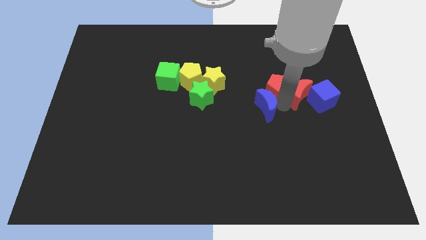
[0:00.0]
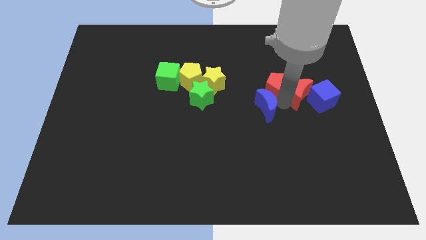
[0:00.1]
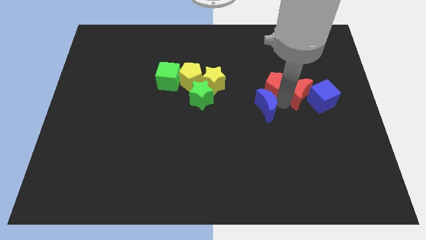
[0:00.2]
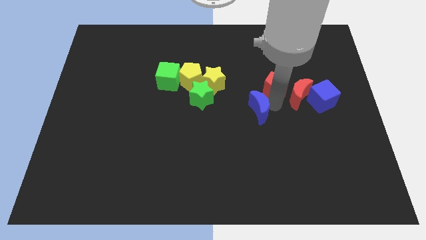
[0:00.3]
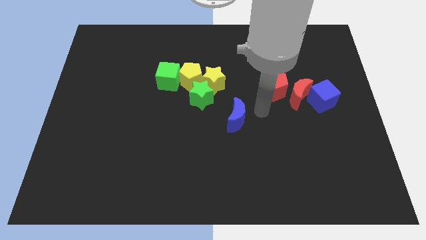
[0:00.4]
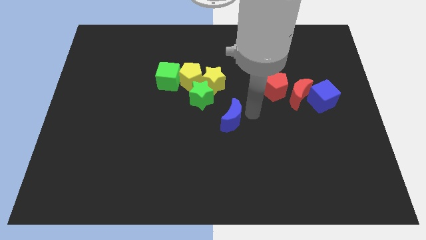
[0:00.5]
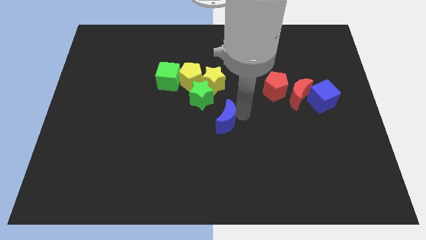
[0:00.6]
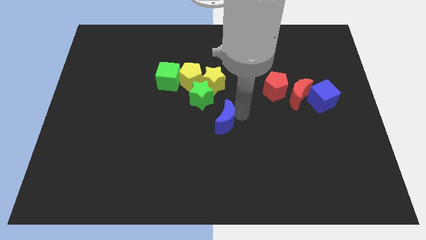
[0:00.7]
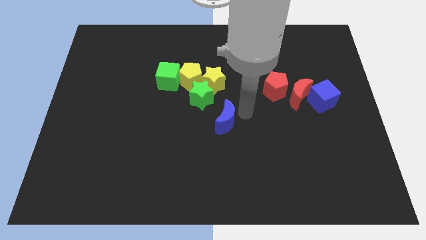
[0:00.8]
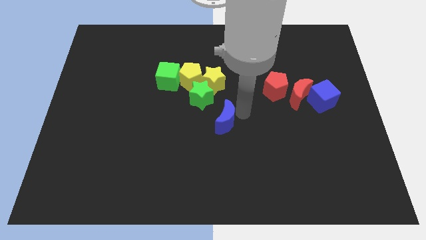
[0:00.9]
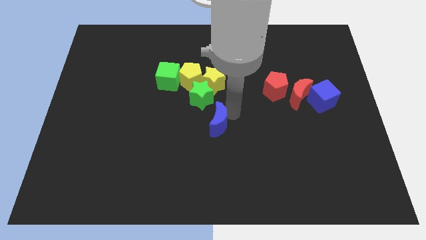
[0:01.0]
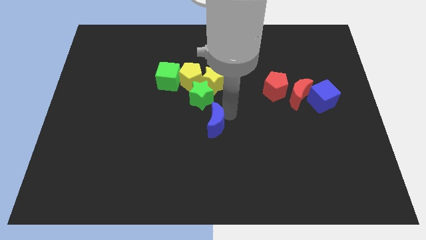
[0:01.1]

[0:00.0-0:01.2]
move the blue crescent away from the red pentagon

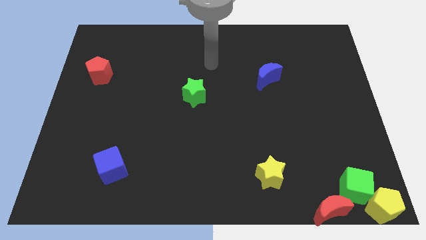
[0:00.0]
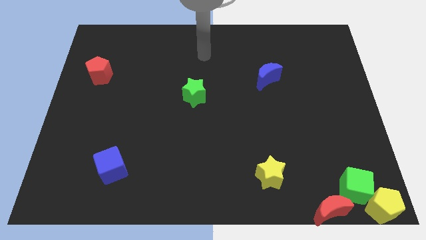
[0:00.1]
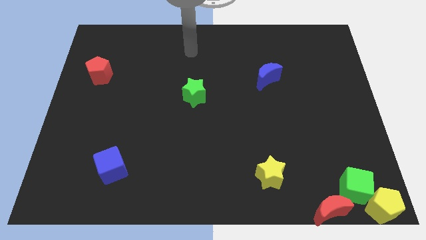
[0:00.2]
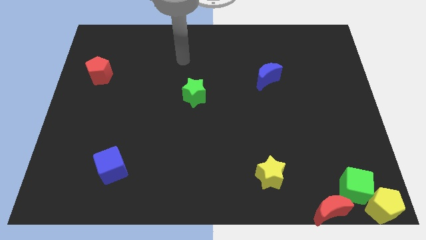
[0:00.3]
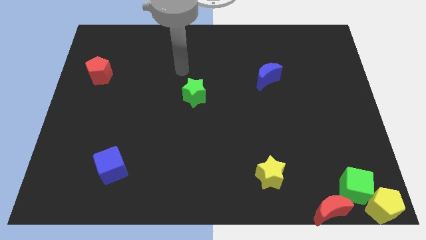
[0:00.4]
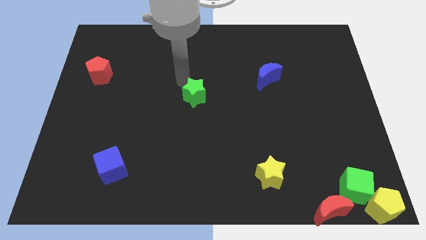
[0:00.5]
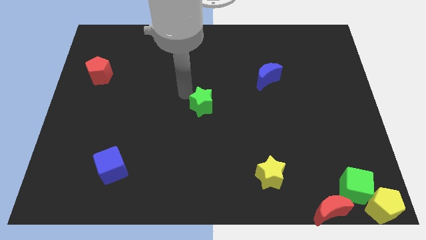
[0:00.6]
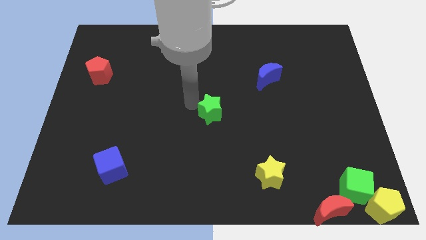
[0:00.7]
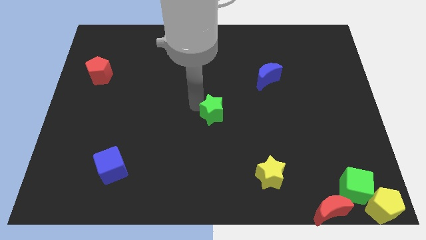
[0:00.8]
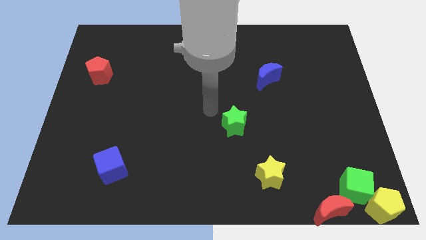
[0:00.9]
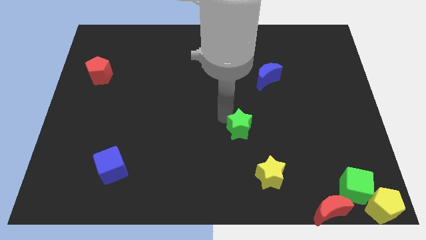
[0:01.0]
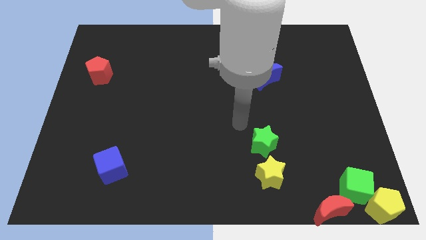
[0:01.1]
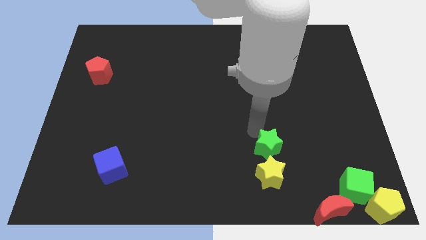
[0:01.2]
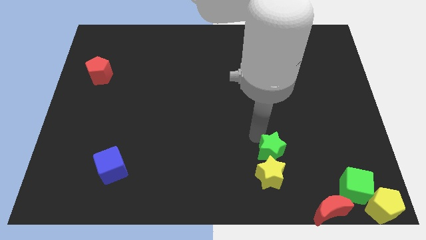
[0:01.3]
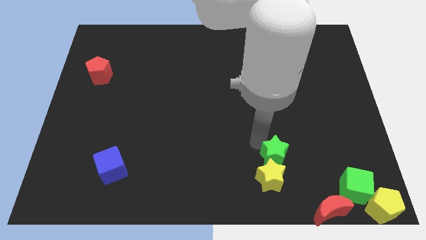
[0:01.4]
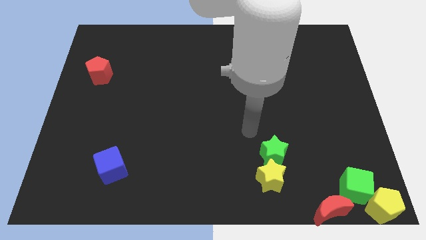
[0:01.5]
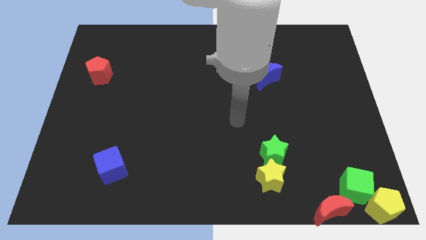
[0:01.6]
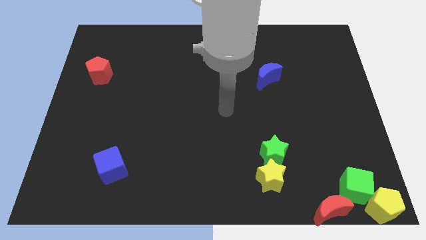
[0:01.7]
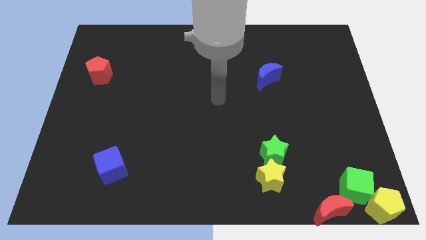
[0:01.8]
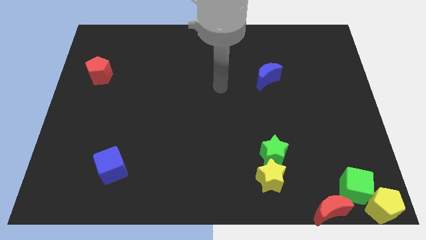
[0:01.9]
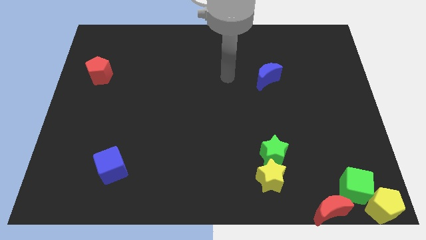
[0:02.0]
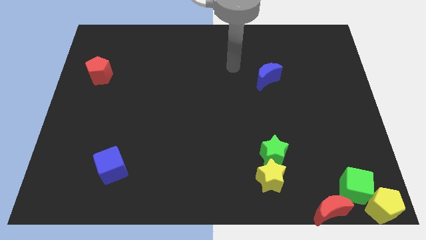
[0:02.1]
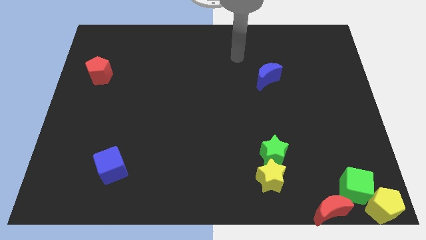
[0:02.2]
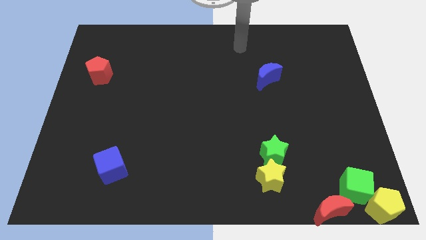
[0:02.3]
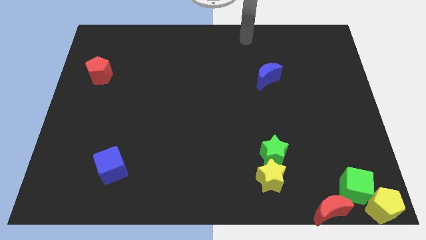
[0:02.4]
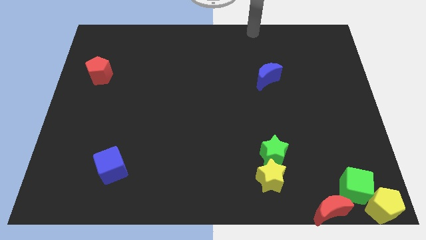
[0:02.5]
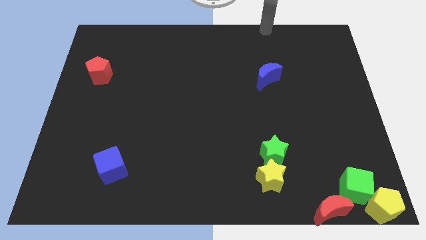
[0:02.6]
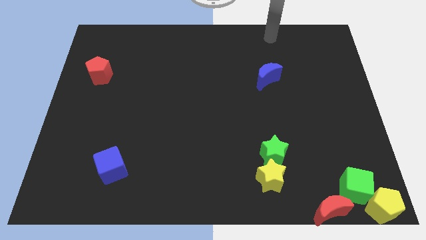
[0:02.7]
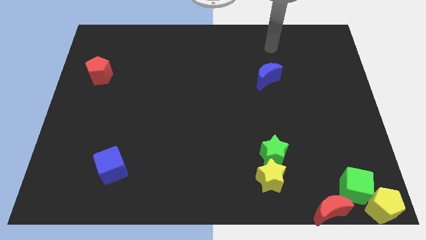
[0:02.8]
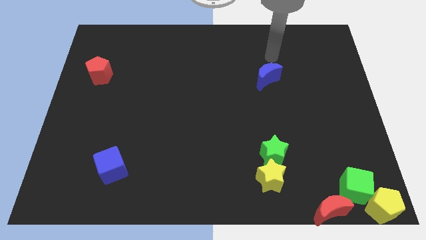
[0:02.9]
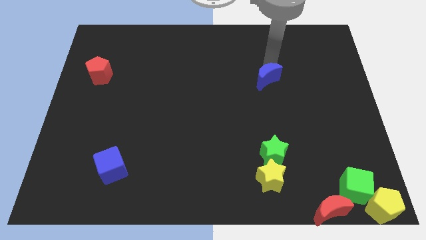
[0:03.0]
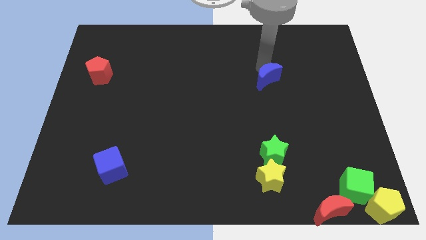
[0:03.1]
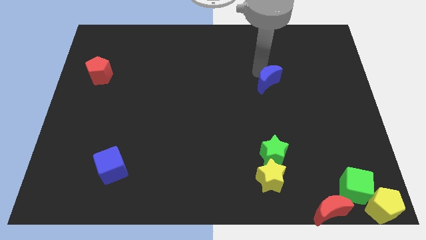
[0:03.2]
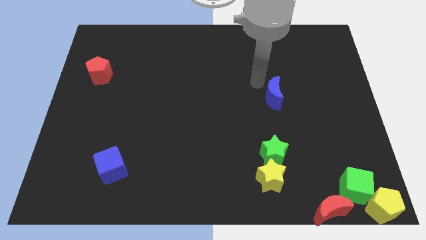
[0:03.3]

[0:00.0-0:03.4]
push the green star into yellow star

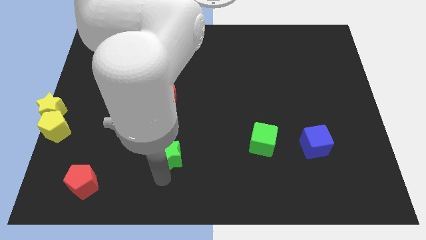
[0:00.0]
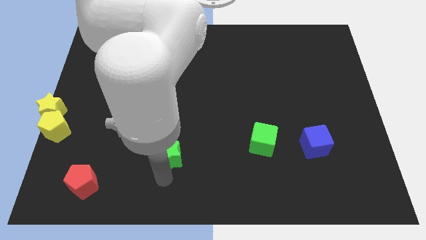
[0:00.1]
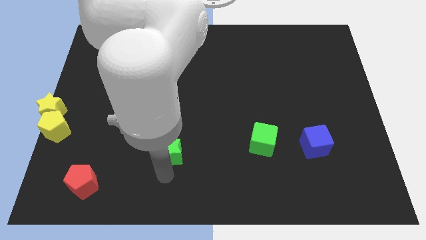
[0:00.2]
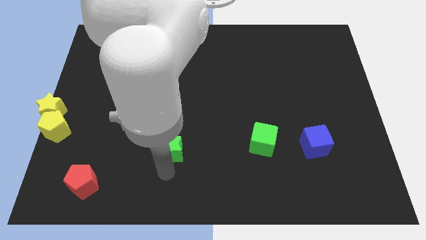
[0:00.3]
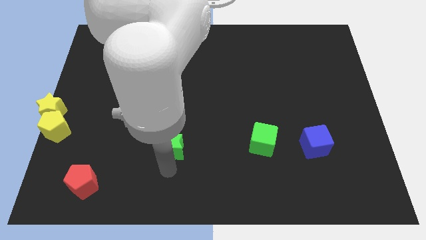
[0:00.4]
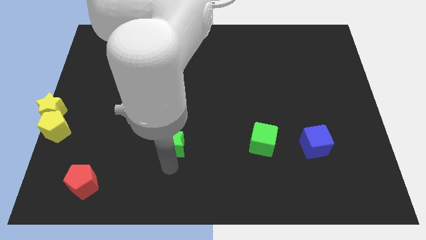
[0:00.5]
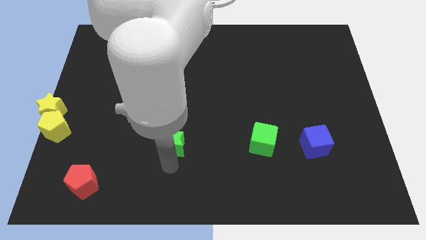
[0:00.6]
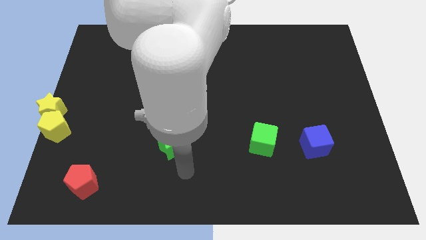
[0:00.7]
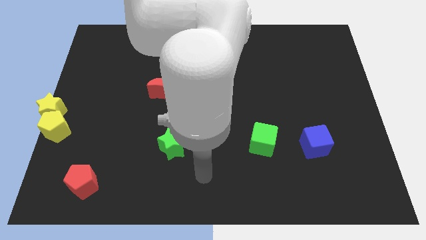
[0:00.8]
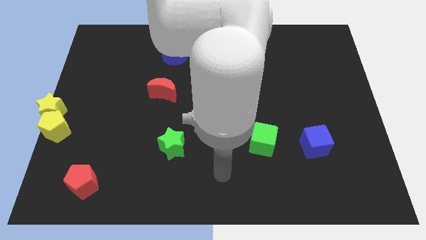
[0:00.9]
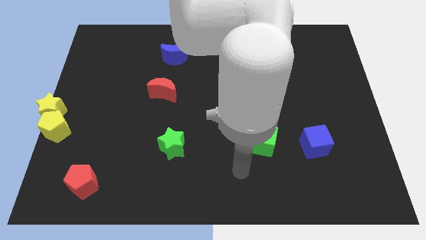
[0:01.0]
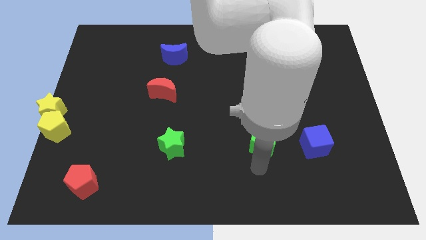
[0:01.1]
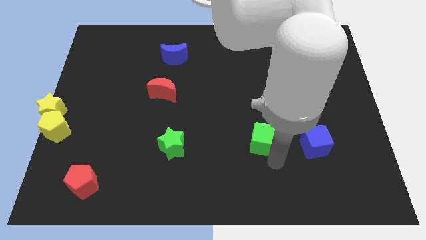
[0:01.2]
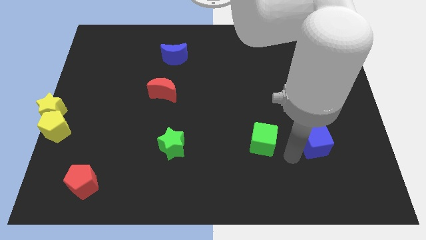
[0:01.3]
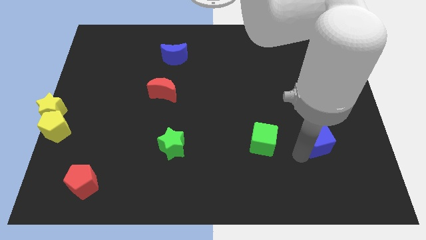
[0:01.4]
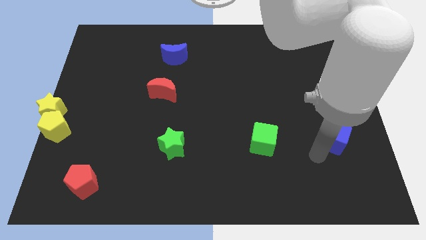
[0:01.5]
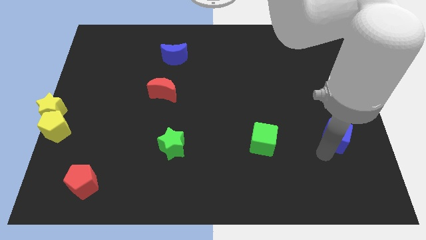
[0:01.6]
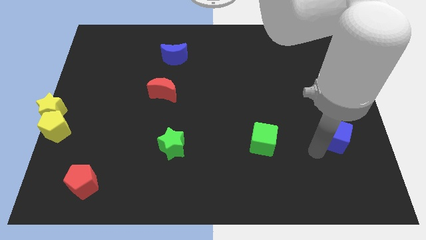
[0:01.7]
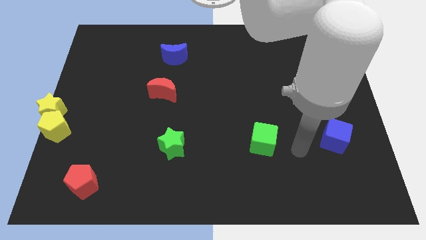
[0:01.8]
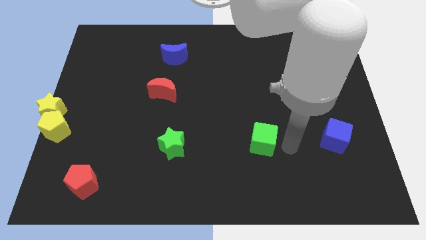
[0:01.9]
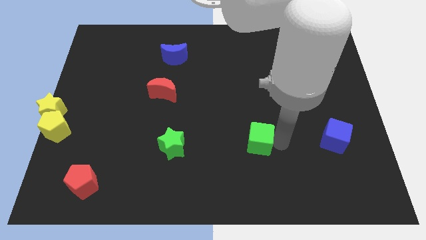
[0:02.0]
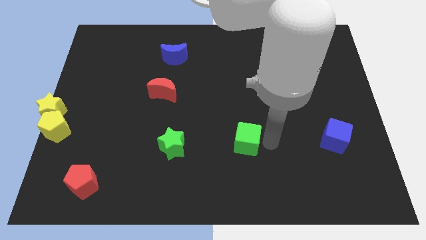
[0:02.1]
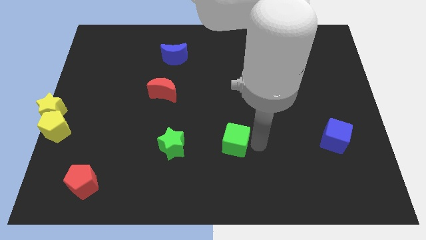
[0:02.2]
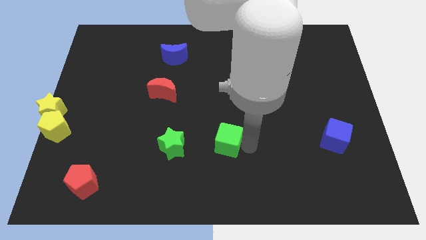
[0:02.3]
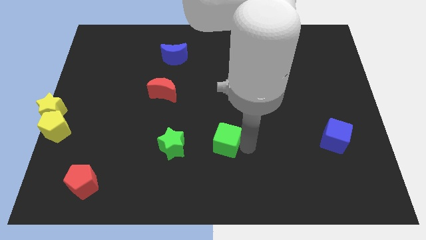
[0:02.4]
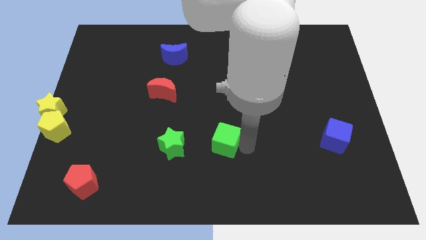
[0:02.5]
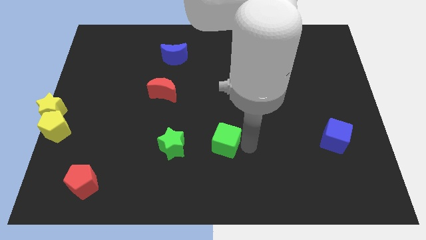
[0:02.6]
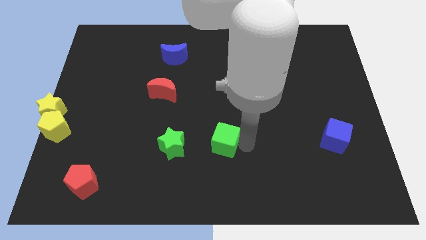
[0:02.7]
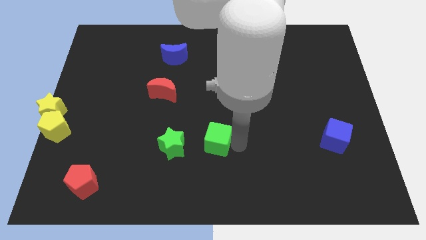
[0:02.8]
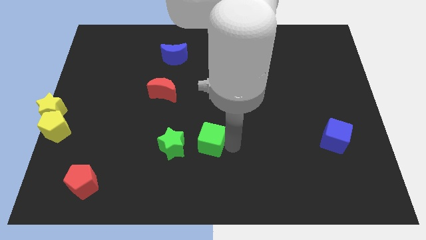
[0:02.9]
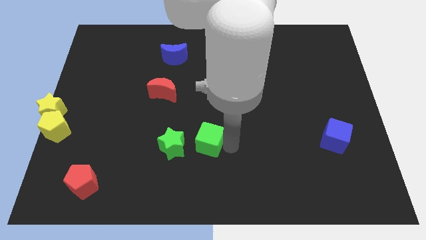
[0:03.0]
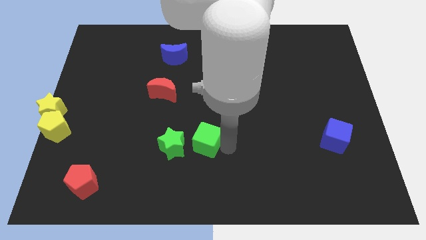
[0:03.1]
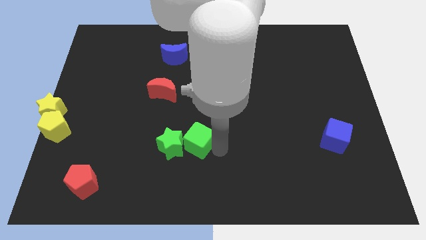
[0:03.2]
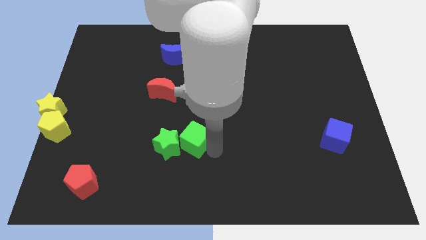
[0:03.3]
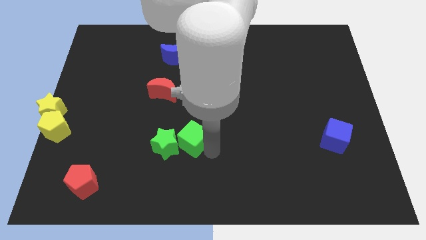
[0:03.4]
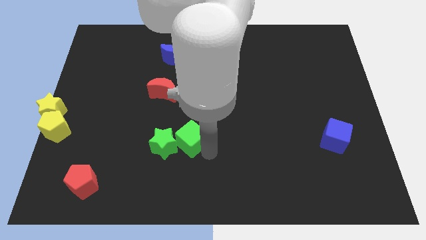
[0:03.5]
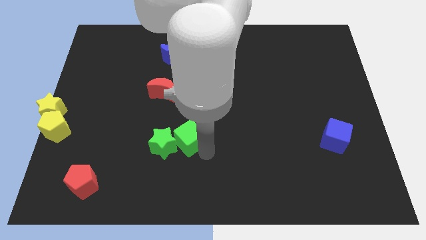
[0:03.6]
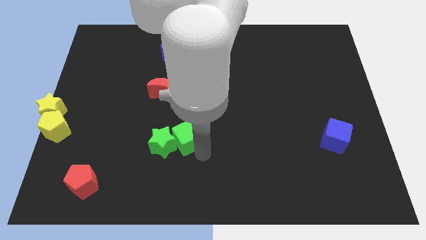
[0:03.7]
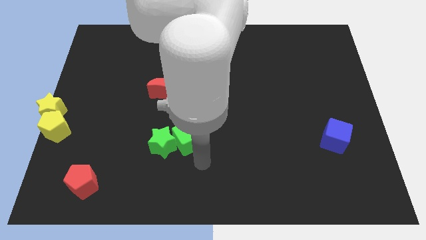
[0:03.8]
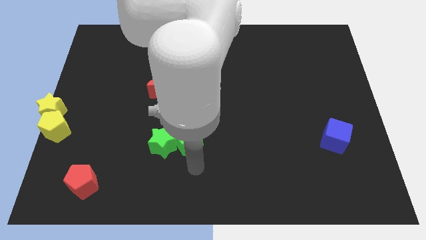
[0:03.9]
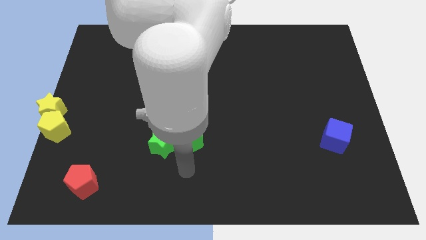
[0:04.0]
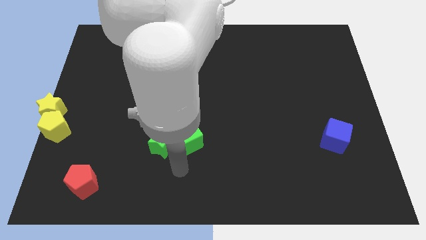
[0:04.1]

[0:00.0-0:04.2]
push green cube beside green star

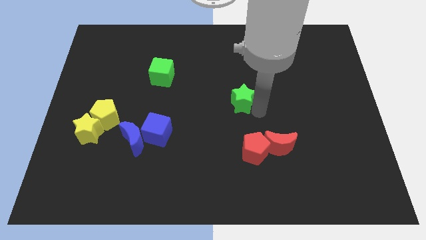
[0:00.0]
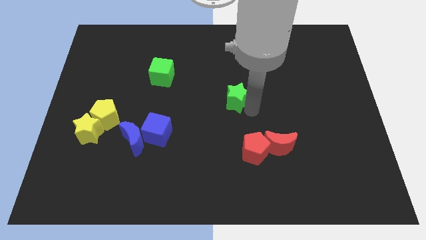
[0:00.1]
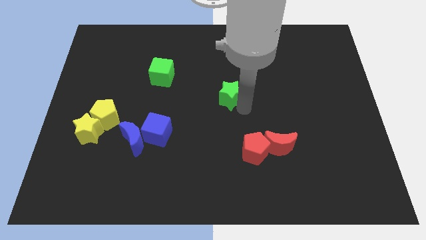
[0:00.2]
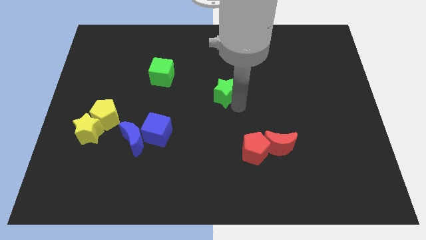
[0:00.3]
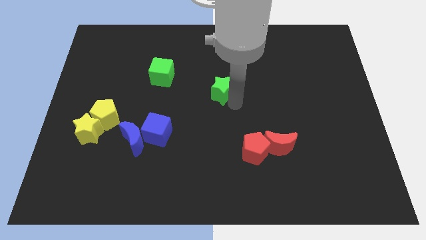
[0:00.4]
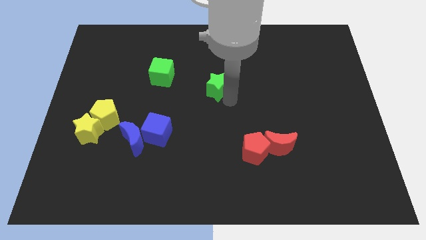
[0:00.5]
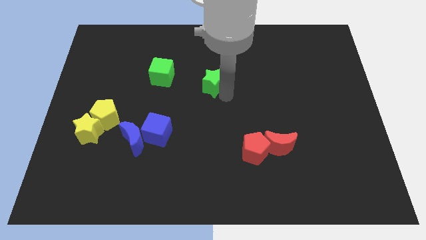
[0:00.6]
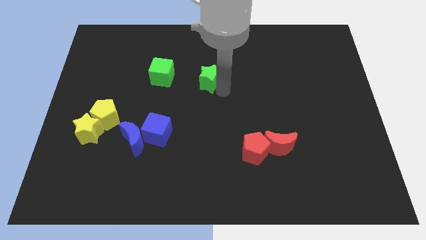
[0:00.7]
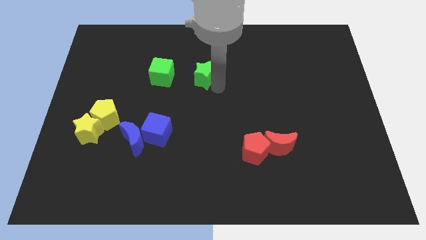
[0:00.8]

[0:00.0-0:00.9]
place the green star right to the green cube
